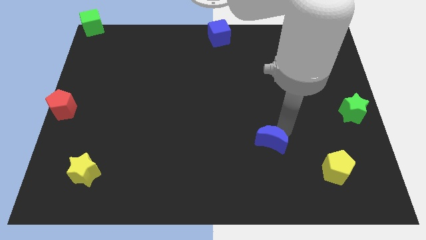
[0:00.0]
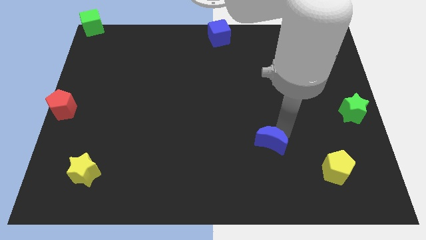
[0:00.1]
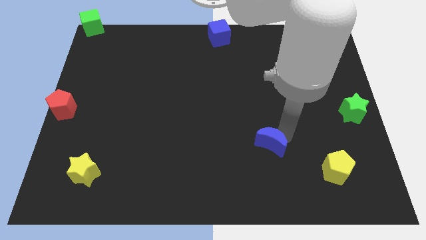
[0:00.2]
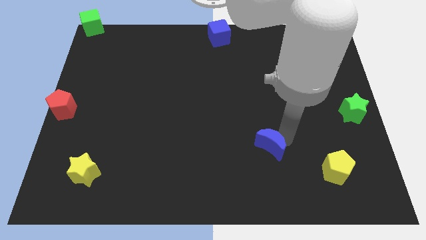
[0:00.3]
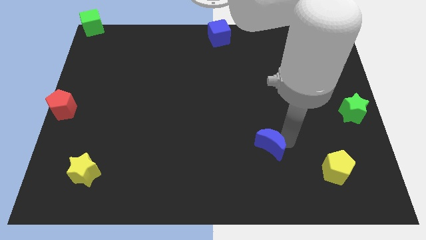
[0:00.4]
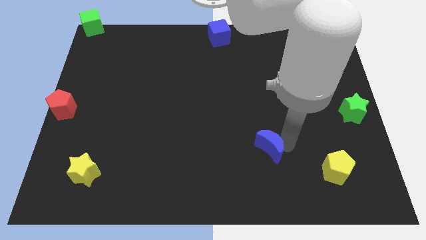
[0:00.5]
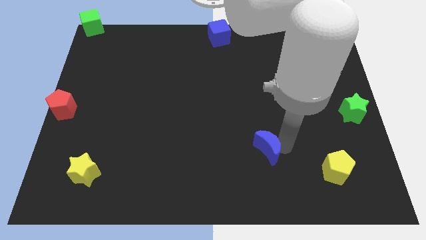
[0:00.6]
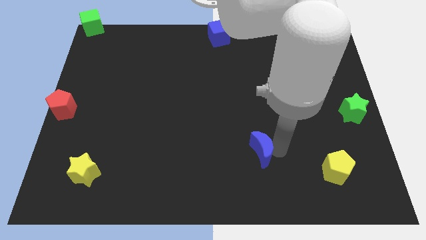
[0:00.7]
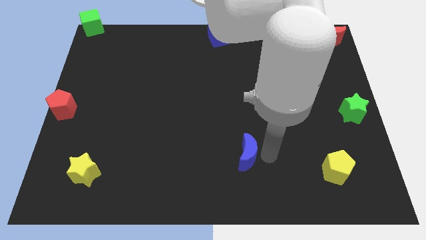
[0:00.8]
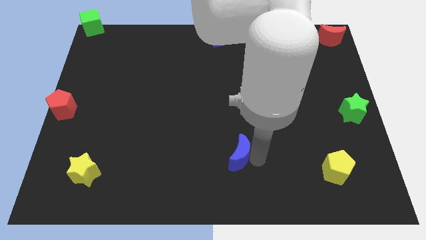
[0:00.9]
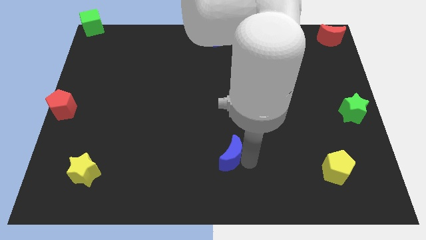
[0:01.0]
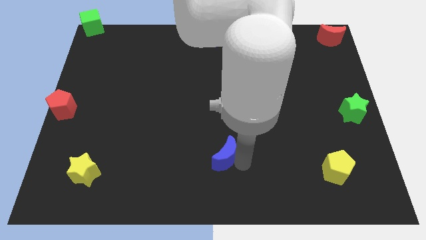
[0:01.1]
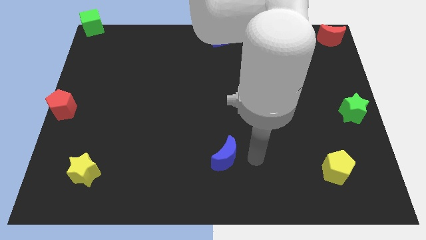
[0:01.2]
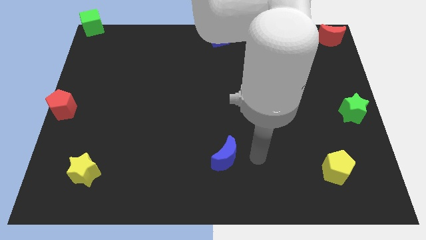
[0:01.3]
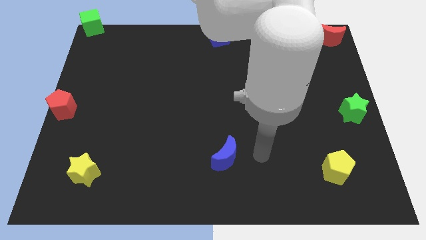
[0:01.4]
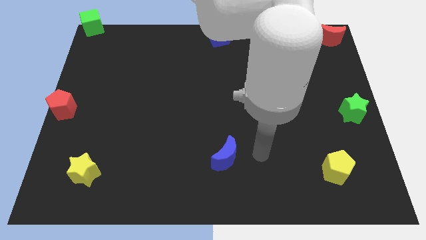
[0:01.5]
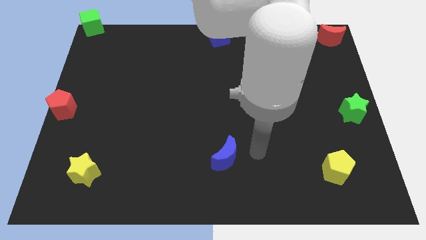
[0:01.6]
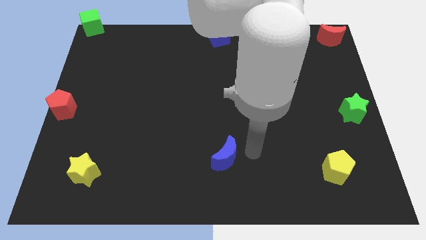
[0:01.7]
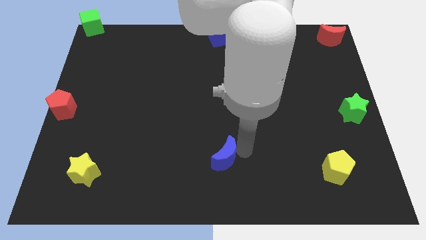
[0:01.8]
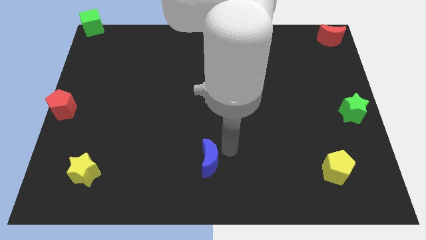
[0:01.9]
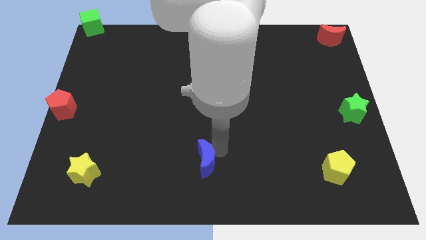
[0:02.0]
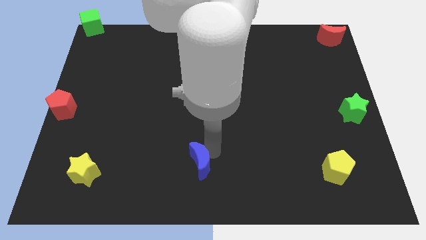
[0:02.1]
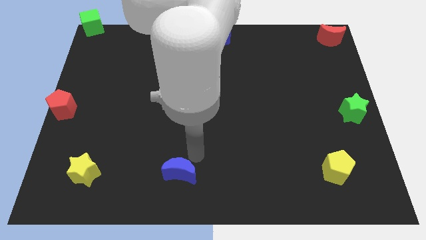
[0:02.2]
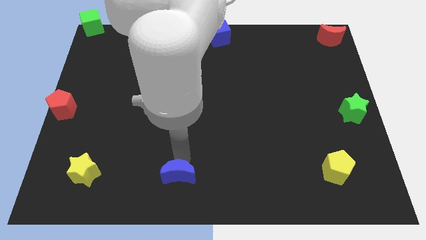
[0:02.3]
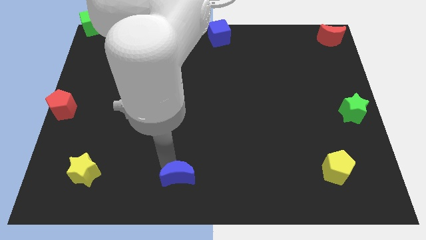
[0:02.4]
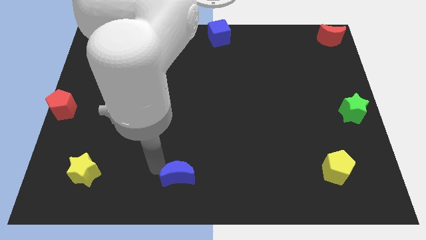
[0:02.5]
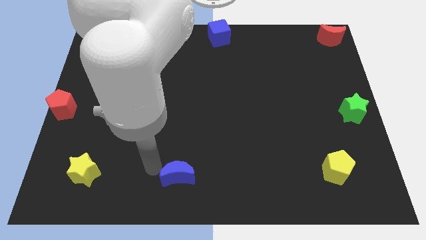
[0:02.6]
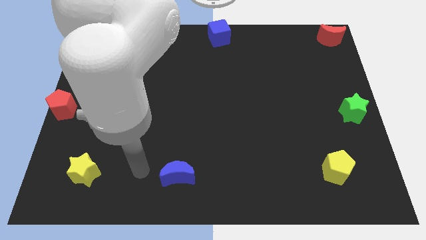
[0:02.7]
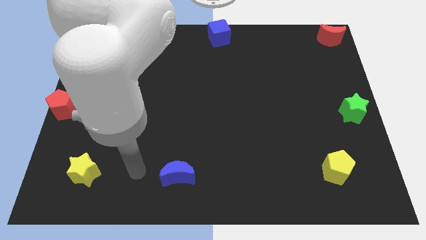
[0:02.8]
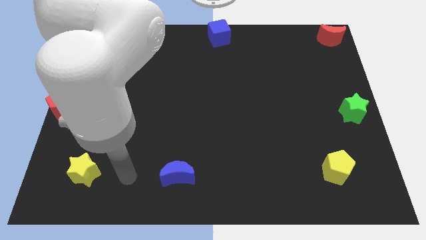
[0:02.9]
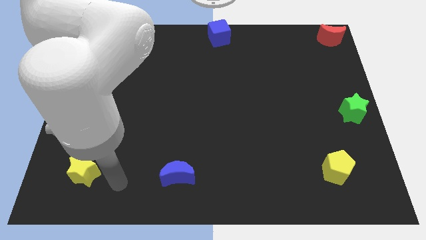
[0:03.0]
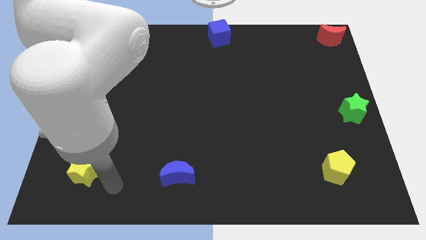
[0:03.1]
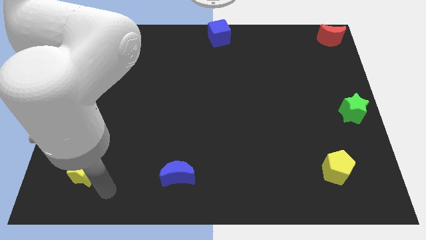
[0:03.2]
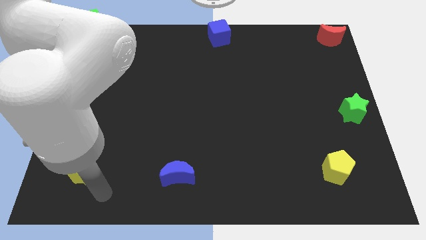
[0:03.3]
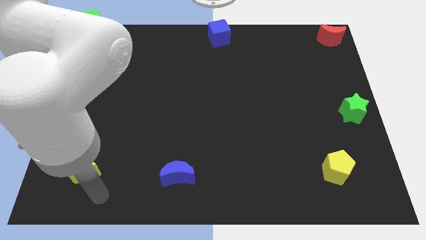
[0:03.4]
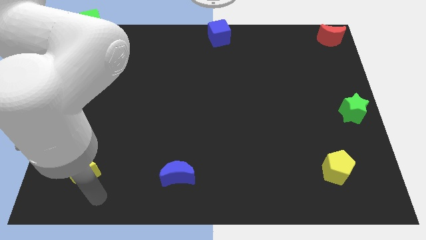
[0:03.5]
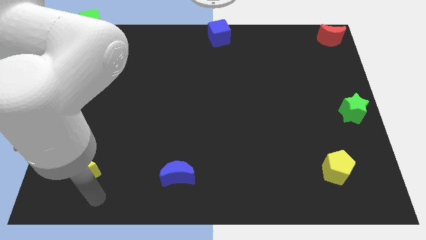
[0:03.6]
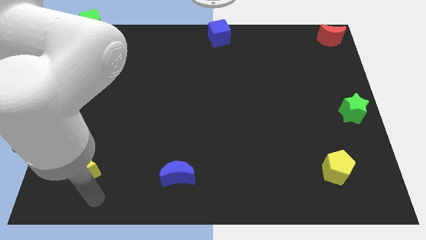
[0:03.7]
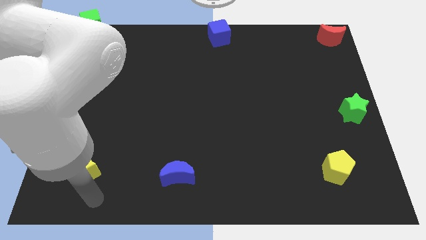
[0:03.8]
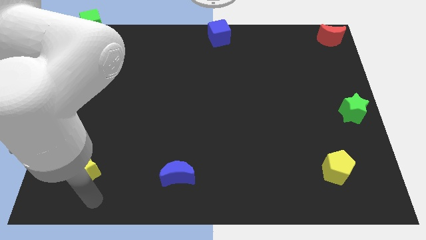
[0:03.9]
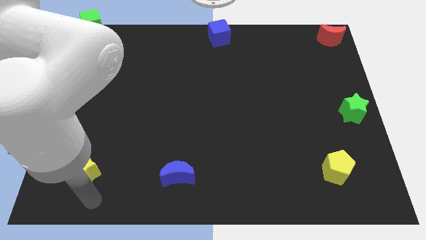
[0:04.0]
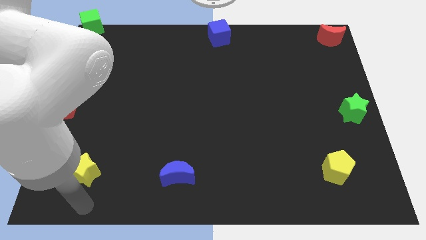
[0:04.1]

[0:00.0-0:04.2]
move blue moon to the left

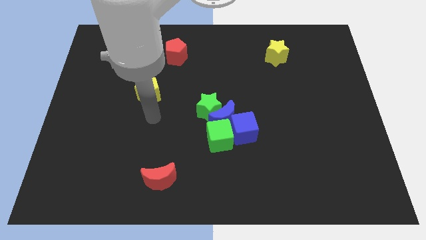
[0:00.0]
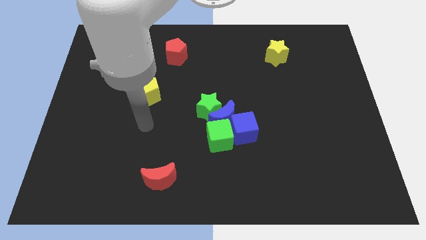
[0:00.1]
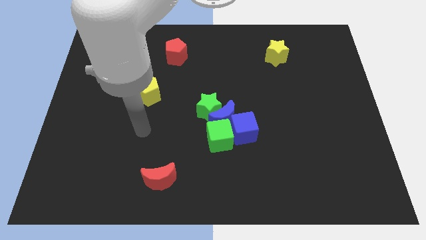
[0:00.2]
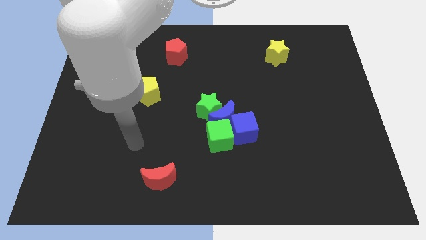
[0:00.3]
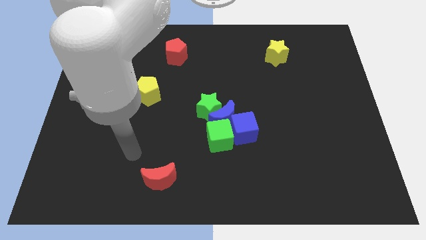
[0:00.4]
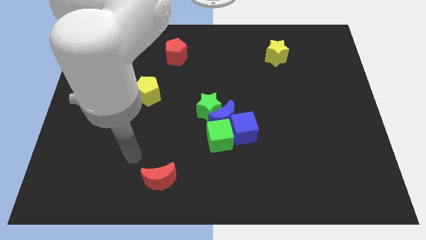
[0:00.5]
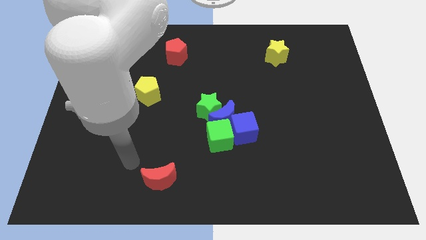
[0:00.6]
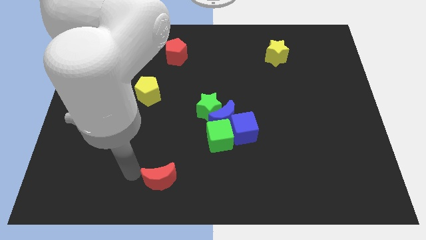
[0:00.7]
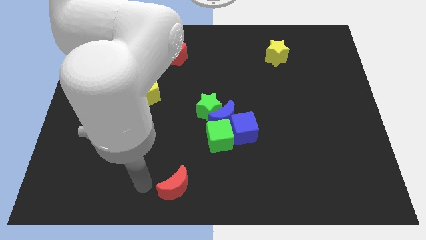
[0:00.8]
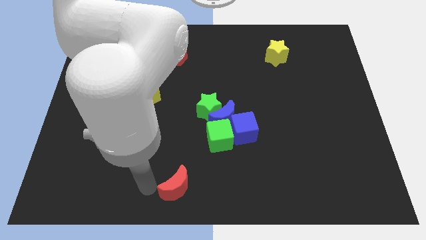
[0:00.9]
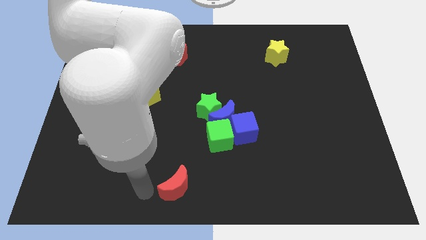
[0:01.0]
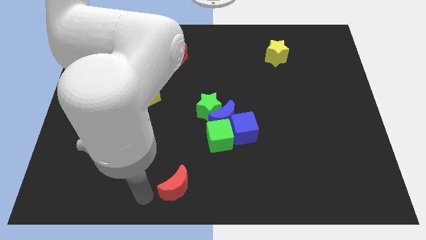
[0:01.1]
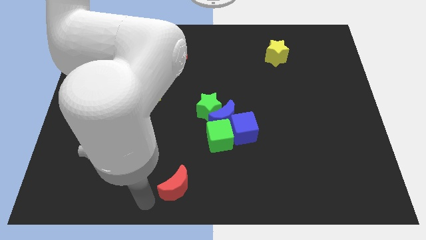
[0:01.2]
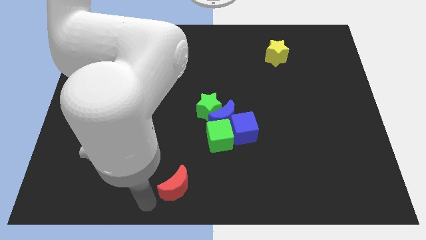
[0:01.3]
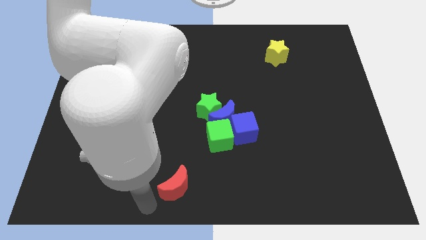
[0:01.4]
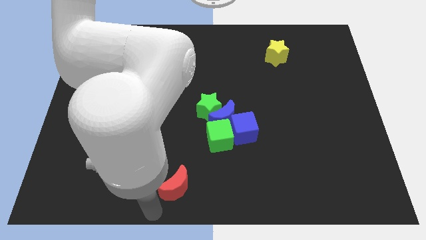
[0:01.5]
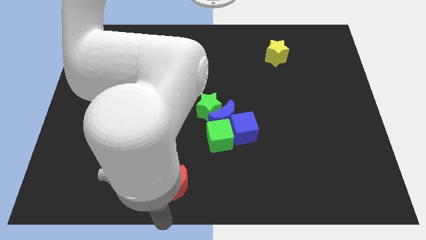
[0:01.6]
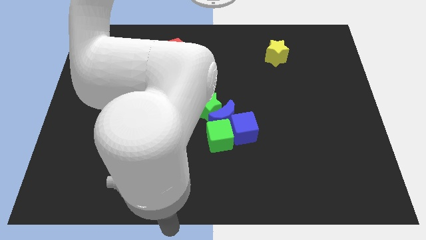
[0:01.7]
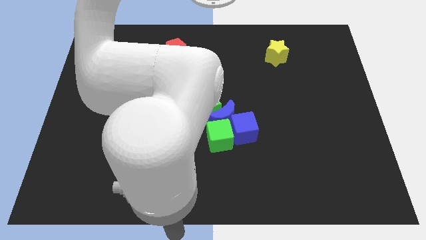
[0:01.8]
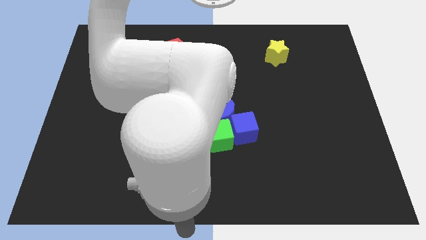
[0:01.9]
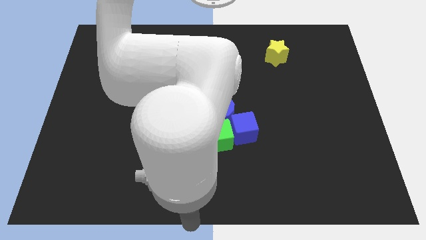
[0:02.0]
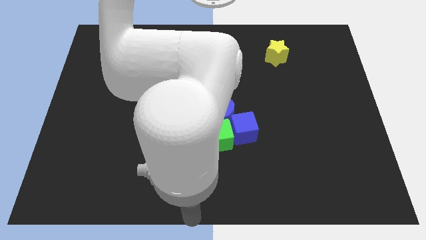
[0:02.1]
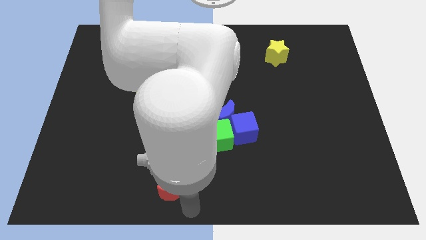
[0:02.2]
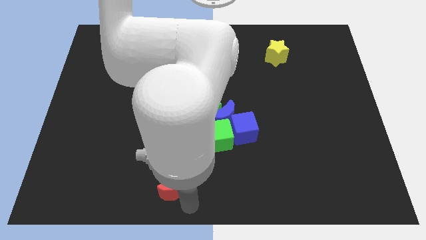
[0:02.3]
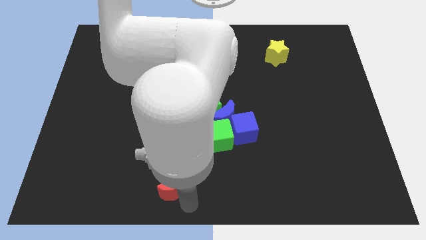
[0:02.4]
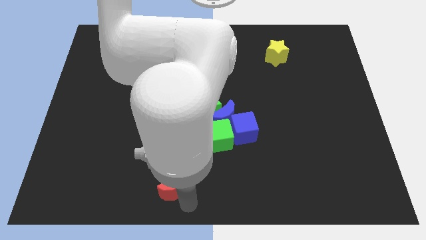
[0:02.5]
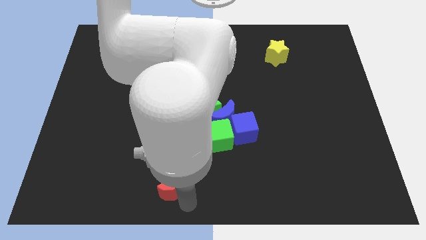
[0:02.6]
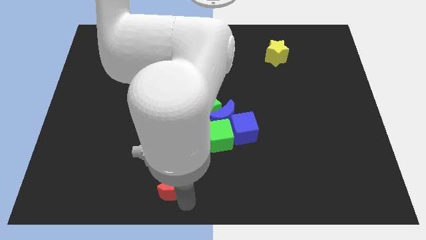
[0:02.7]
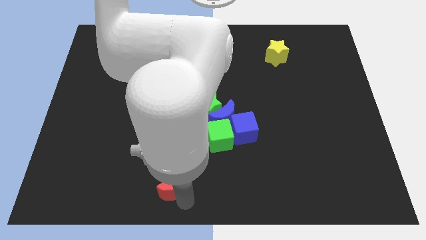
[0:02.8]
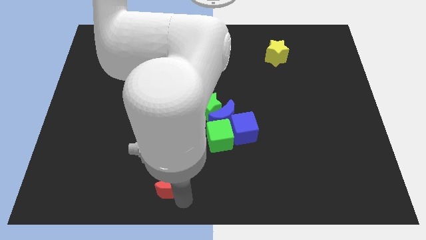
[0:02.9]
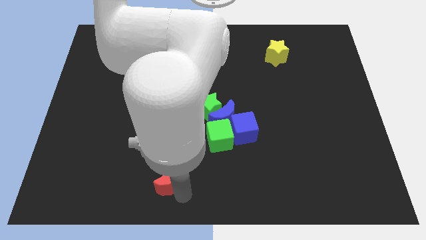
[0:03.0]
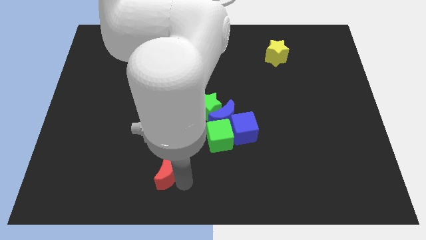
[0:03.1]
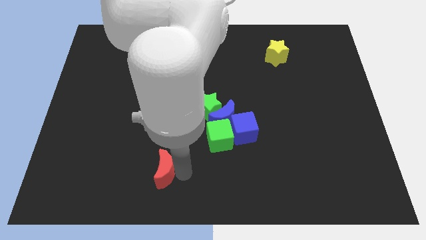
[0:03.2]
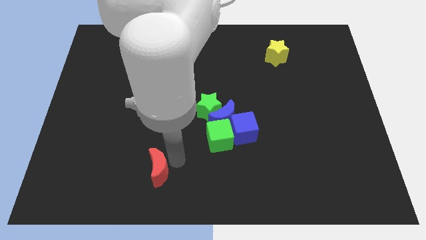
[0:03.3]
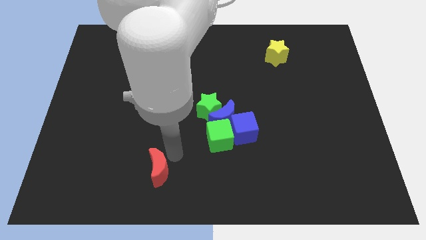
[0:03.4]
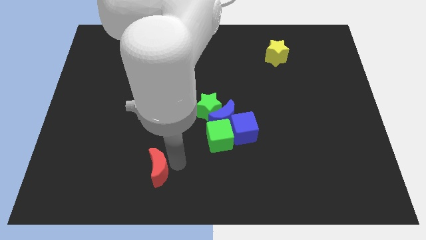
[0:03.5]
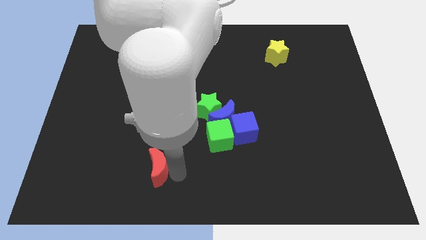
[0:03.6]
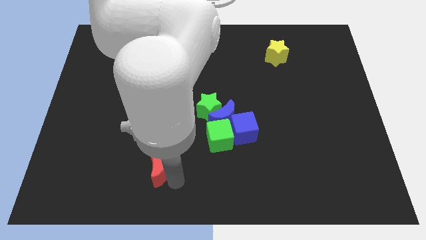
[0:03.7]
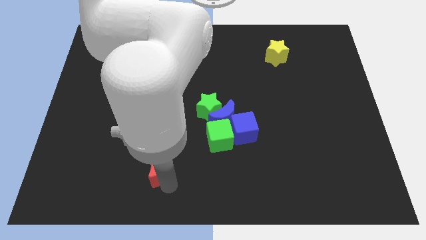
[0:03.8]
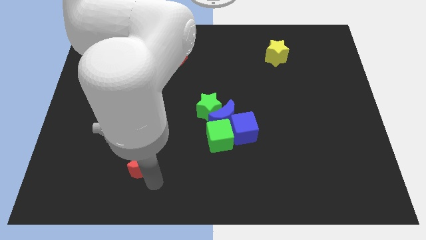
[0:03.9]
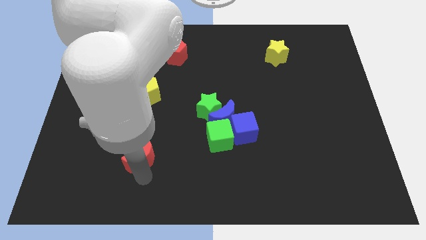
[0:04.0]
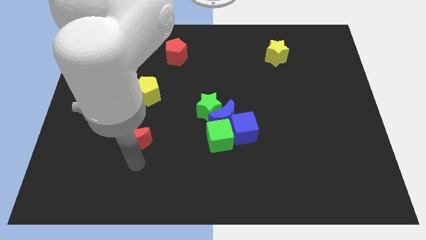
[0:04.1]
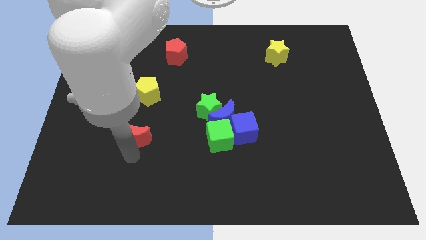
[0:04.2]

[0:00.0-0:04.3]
place the red moon left to the green cube

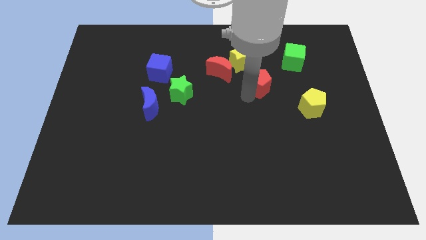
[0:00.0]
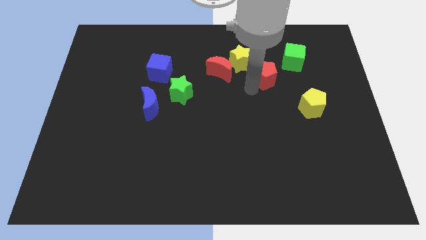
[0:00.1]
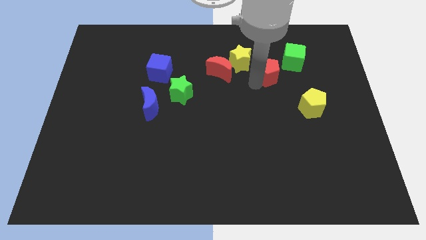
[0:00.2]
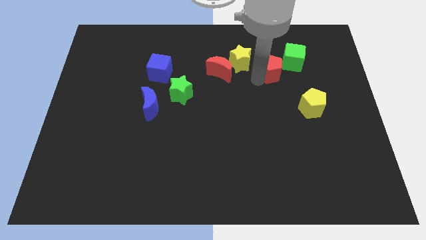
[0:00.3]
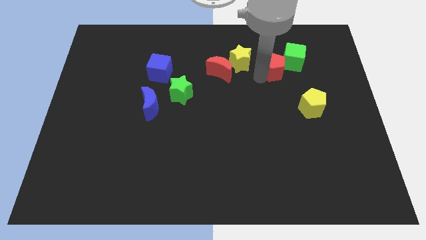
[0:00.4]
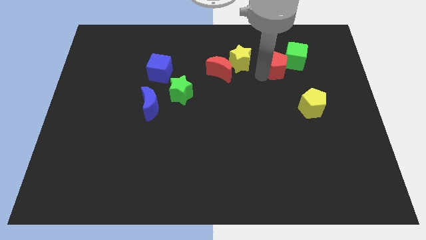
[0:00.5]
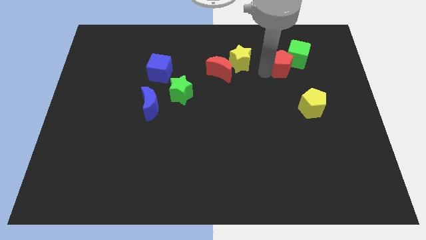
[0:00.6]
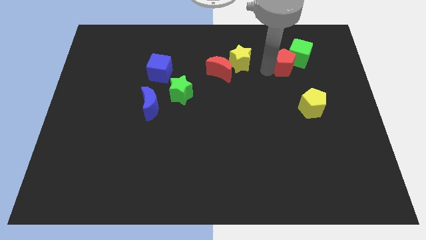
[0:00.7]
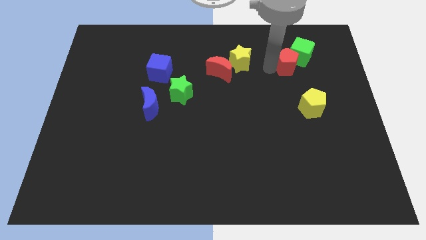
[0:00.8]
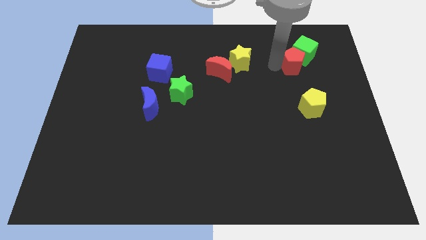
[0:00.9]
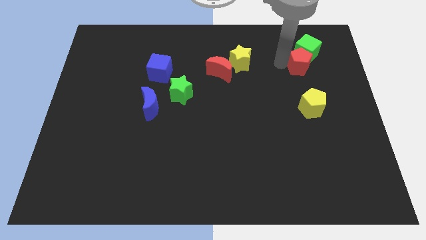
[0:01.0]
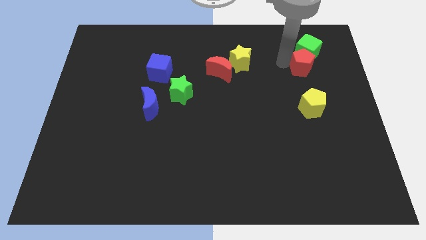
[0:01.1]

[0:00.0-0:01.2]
push red pentagon into green cube
